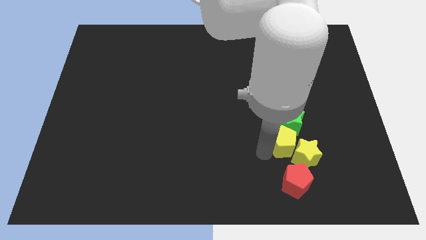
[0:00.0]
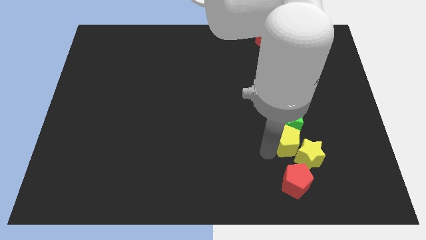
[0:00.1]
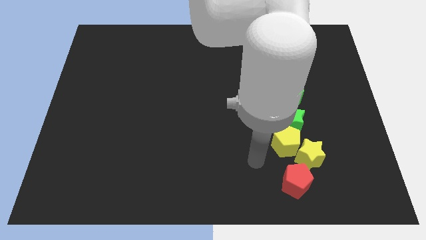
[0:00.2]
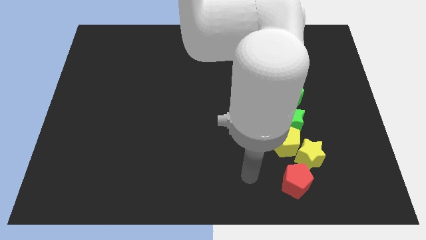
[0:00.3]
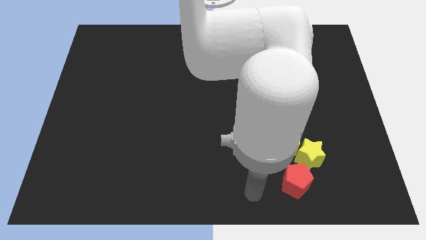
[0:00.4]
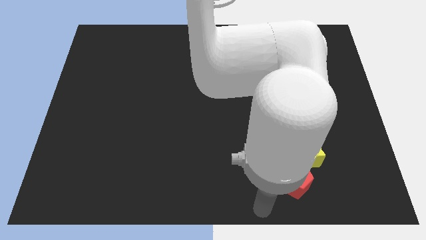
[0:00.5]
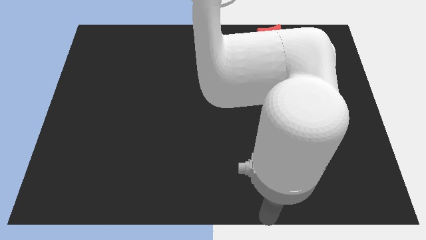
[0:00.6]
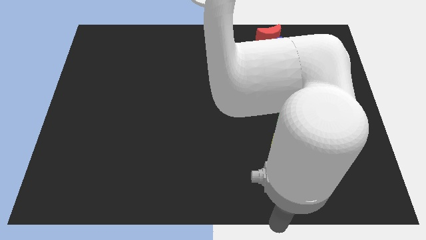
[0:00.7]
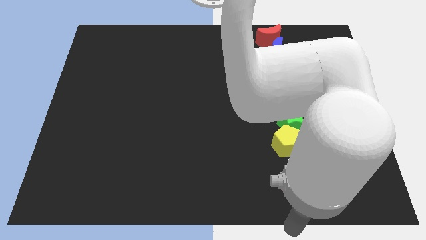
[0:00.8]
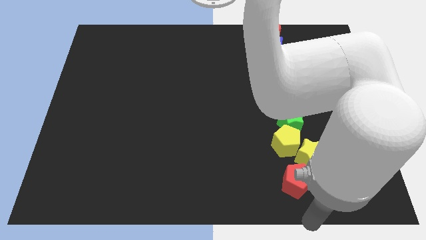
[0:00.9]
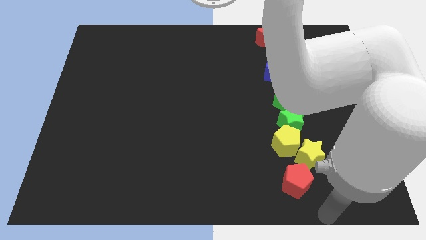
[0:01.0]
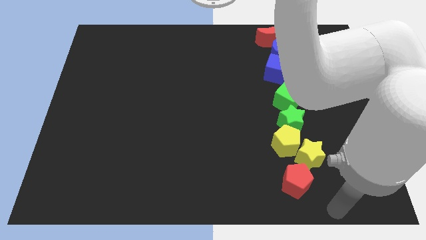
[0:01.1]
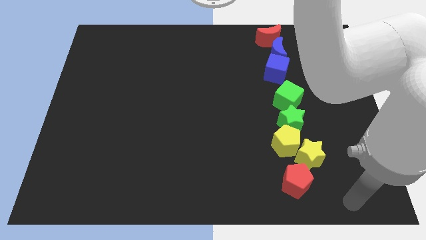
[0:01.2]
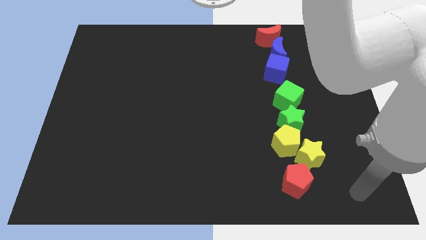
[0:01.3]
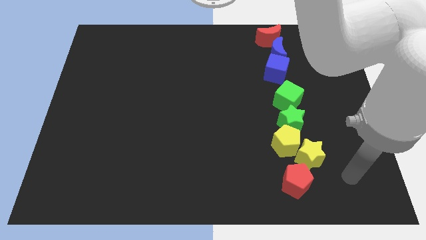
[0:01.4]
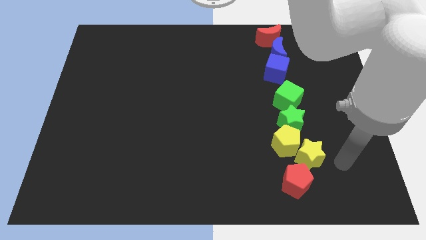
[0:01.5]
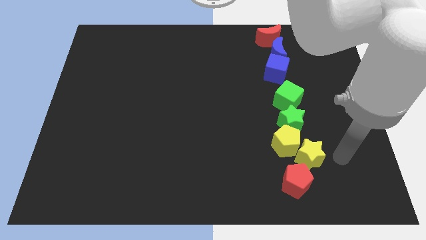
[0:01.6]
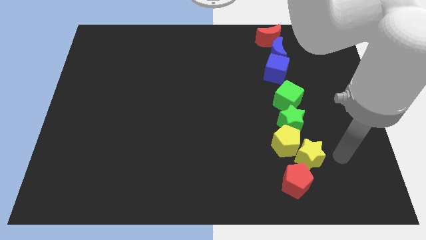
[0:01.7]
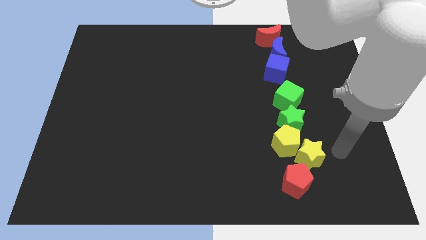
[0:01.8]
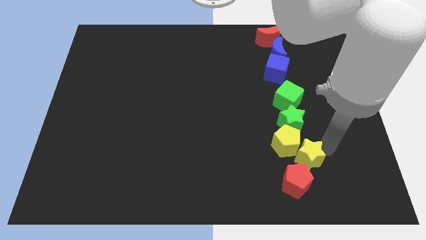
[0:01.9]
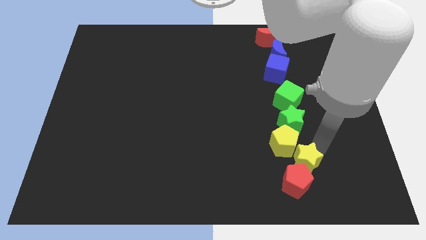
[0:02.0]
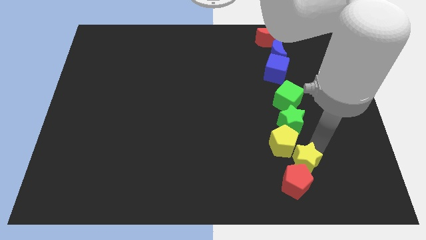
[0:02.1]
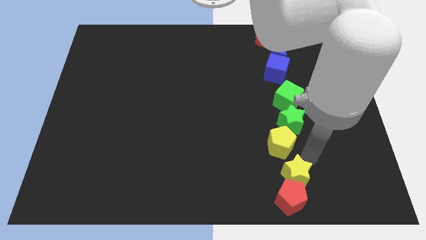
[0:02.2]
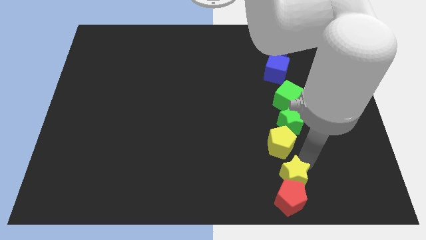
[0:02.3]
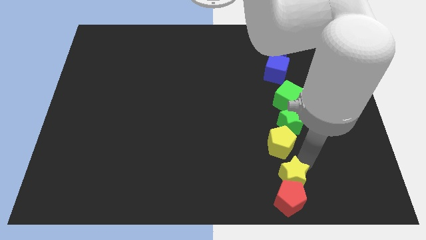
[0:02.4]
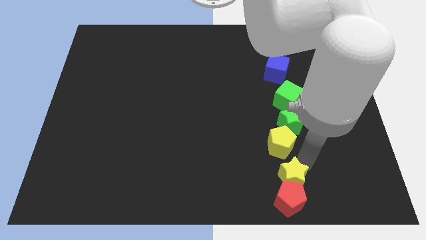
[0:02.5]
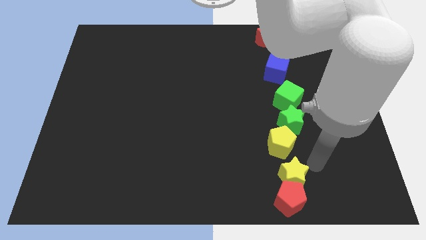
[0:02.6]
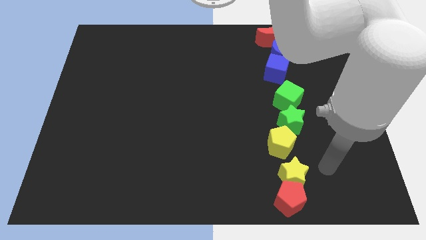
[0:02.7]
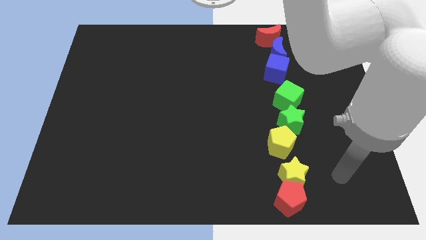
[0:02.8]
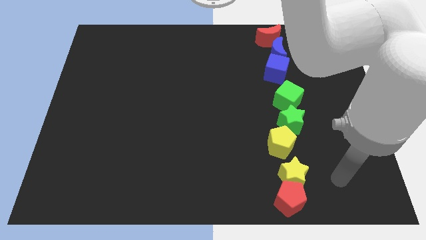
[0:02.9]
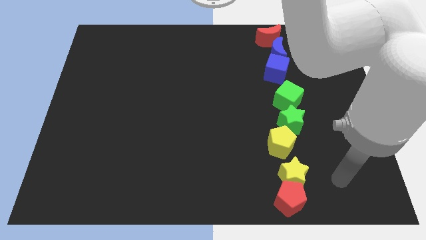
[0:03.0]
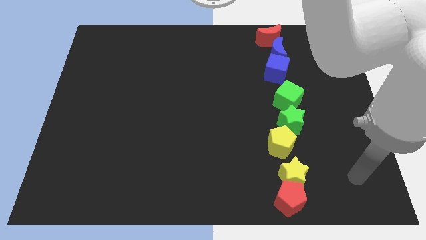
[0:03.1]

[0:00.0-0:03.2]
push the yellow star into red pentagon

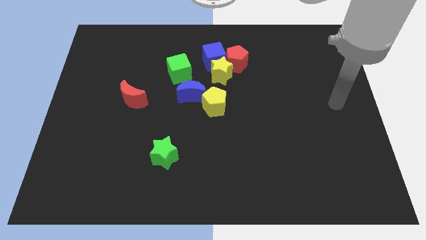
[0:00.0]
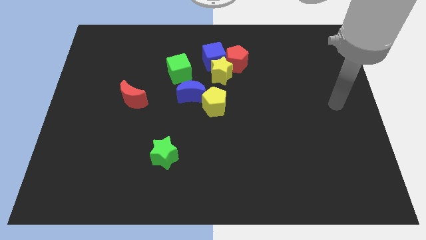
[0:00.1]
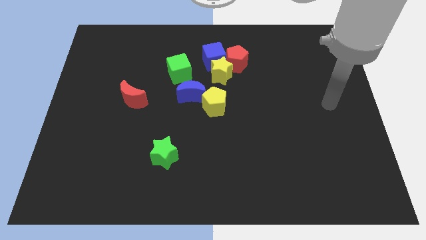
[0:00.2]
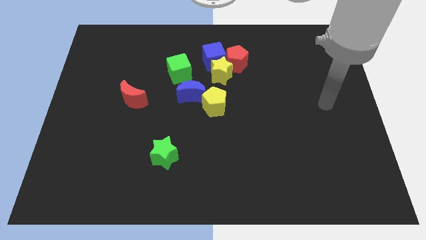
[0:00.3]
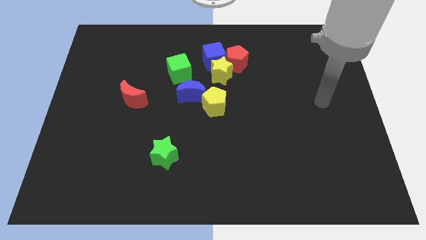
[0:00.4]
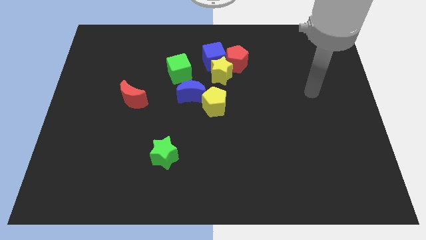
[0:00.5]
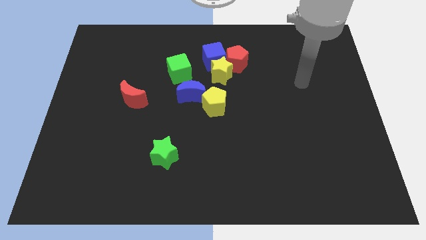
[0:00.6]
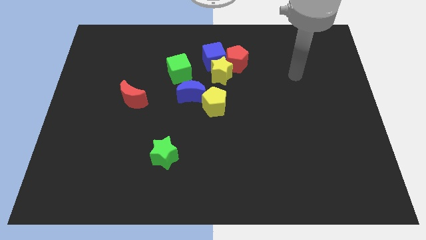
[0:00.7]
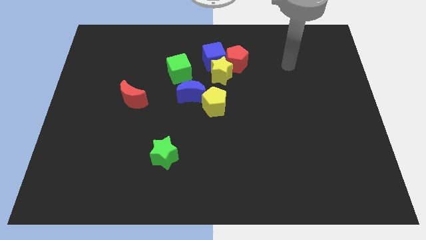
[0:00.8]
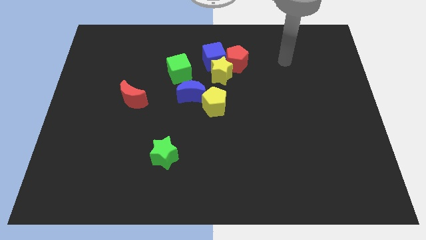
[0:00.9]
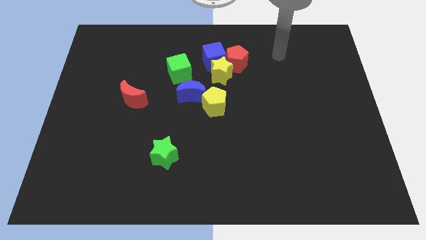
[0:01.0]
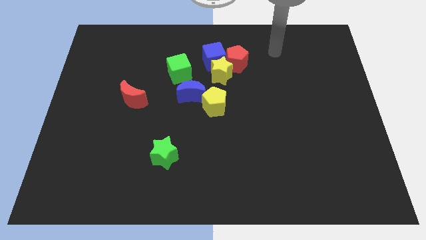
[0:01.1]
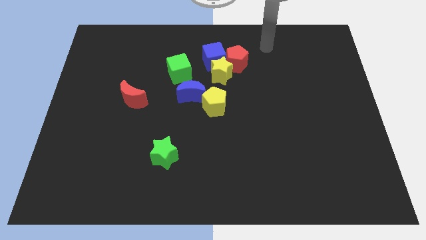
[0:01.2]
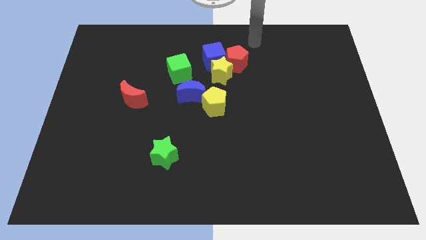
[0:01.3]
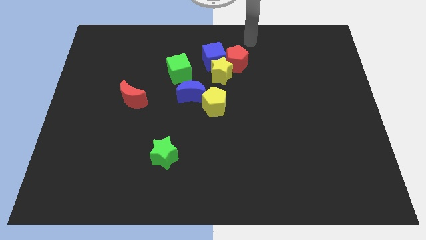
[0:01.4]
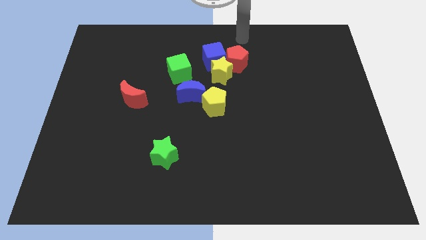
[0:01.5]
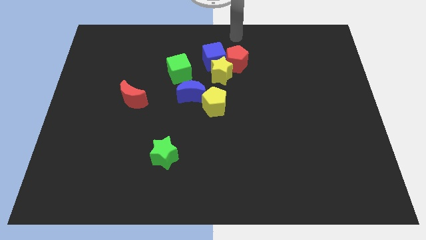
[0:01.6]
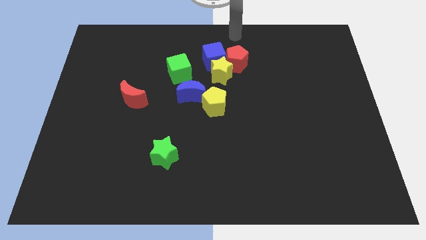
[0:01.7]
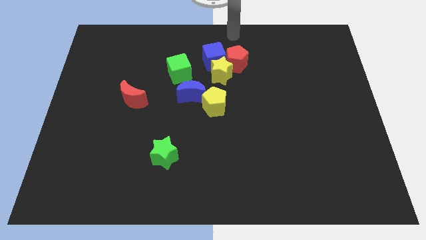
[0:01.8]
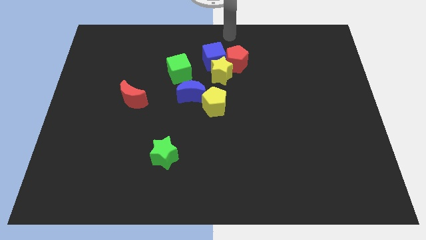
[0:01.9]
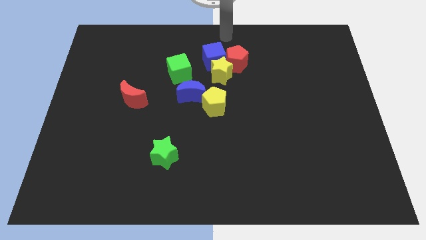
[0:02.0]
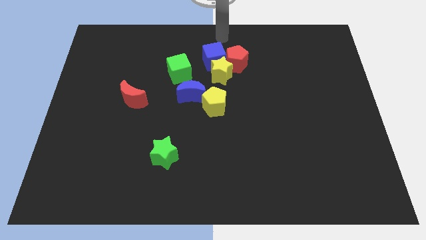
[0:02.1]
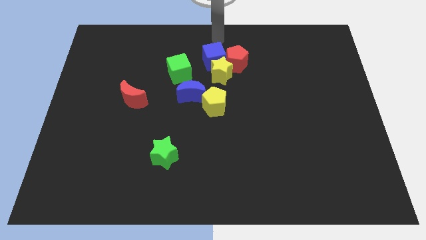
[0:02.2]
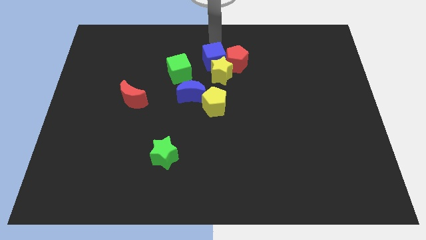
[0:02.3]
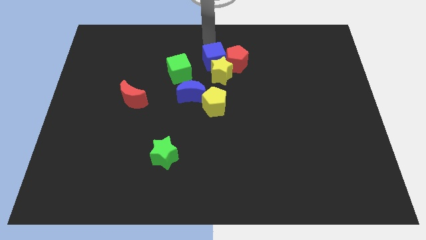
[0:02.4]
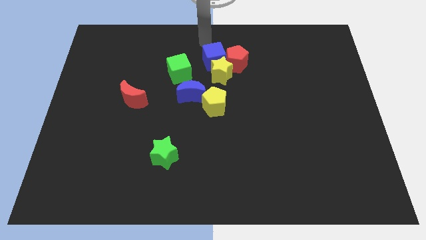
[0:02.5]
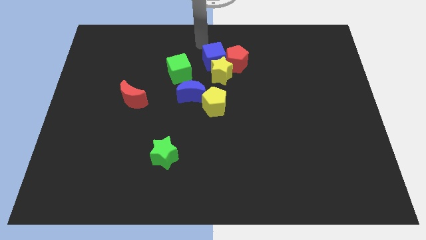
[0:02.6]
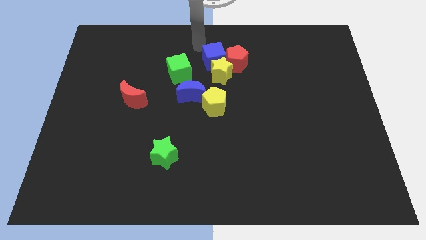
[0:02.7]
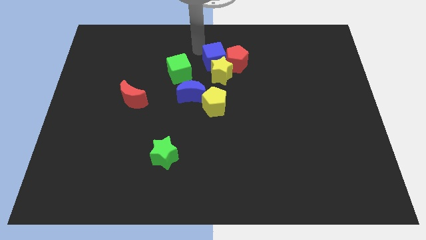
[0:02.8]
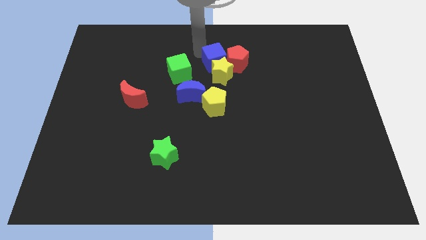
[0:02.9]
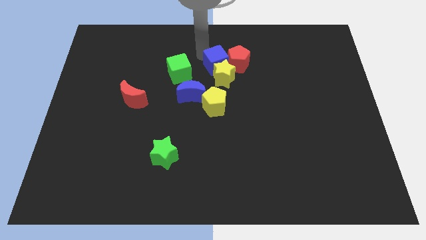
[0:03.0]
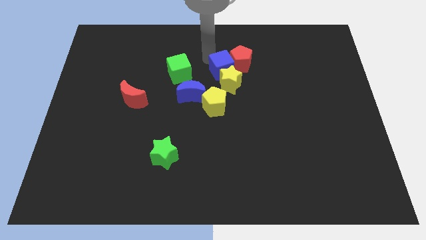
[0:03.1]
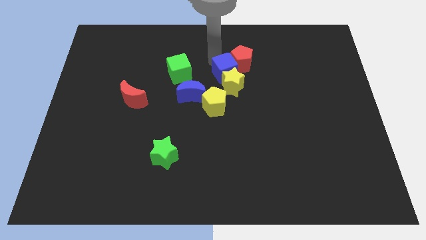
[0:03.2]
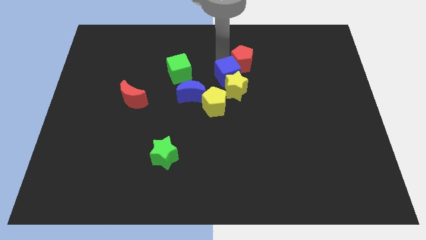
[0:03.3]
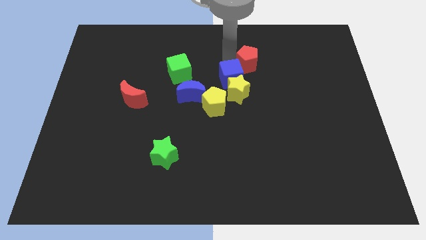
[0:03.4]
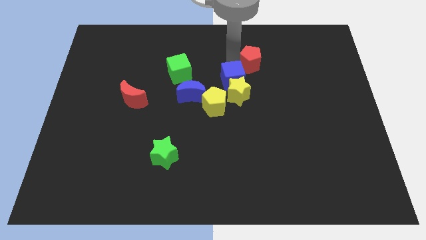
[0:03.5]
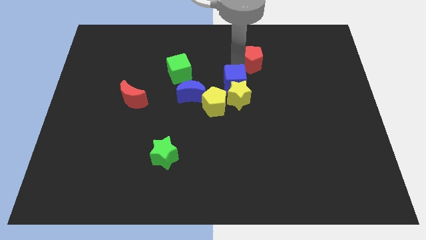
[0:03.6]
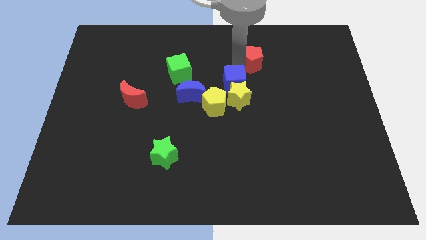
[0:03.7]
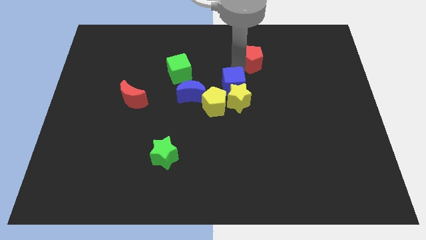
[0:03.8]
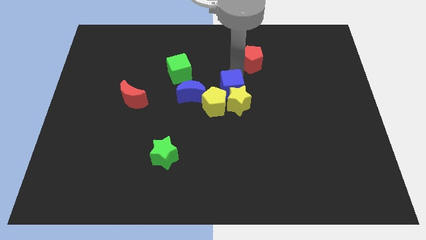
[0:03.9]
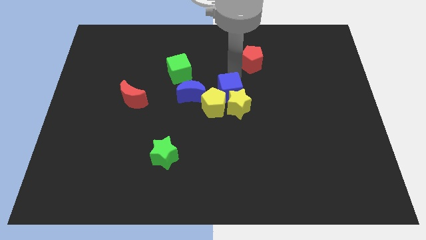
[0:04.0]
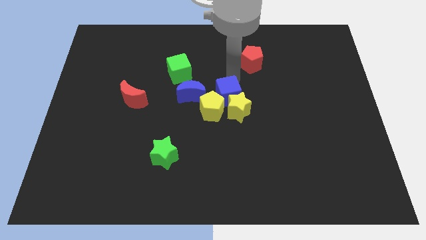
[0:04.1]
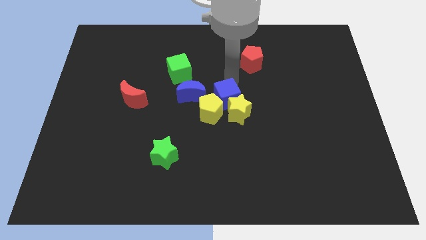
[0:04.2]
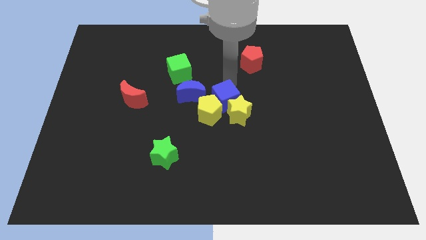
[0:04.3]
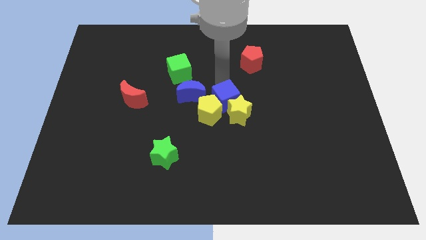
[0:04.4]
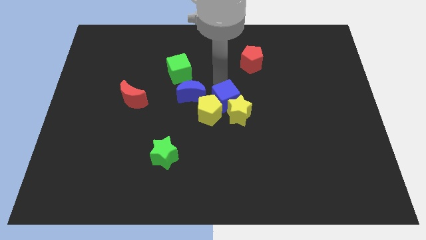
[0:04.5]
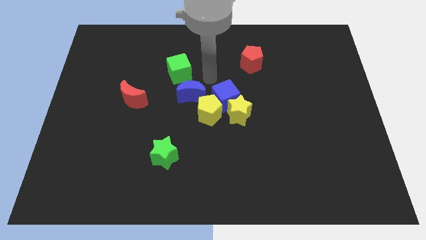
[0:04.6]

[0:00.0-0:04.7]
push the blue cube towards the center of the board

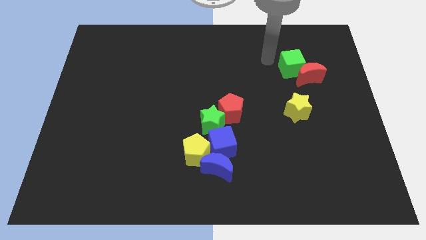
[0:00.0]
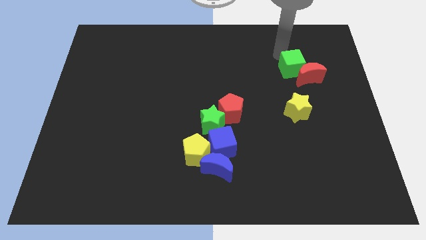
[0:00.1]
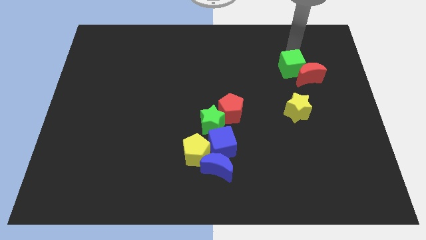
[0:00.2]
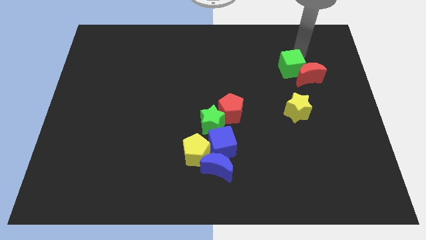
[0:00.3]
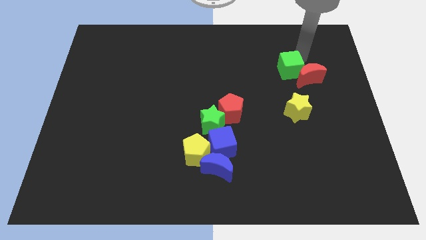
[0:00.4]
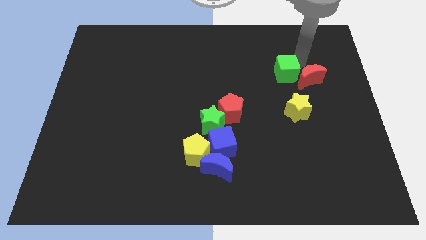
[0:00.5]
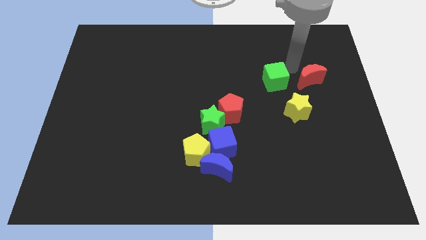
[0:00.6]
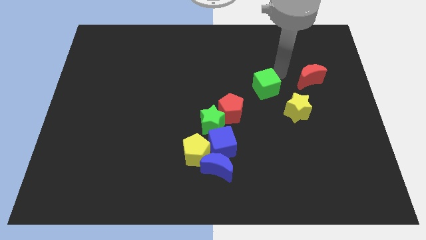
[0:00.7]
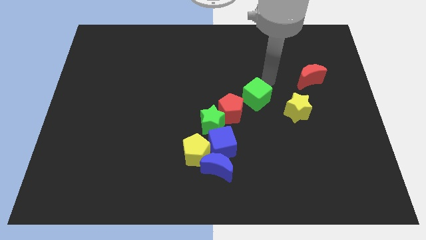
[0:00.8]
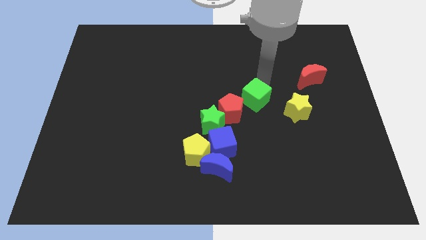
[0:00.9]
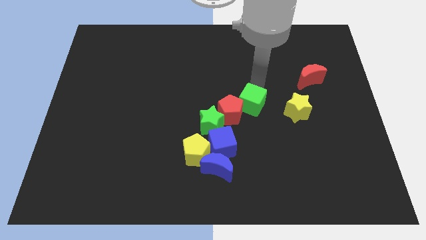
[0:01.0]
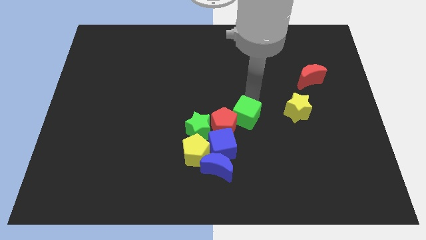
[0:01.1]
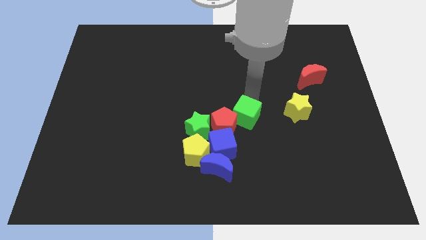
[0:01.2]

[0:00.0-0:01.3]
move the green cube into the red pentagon
